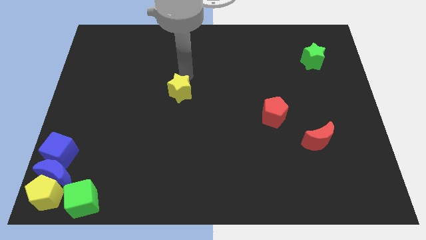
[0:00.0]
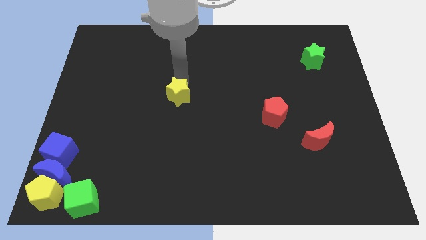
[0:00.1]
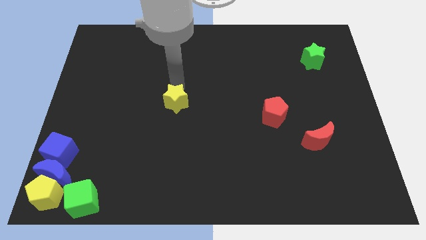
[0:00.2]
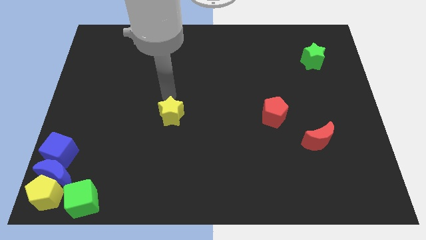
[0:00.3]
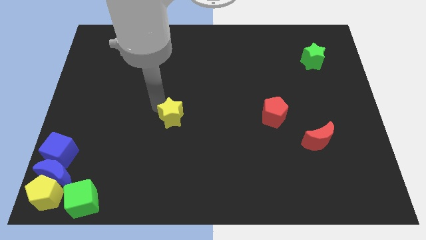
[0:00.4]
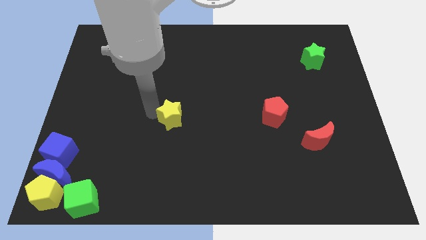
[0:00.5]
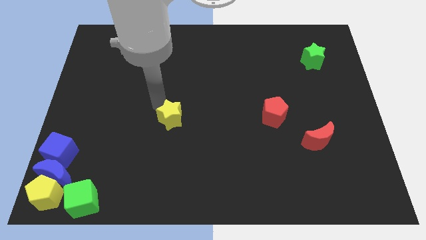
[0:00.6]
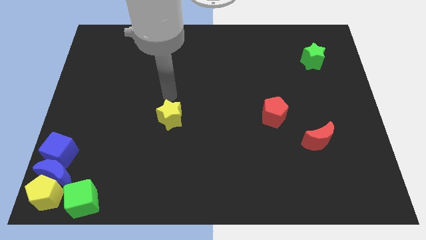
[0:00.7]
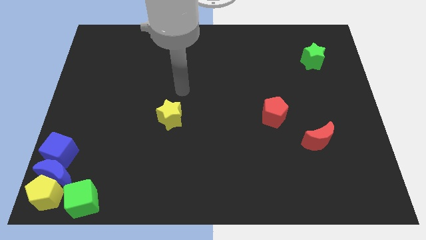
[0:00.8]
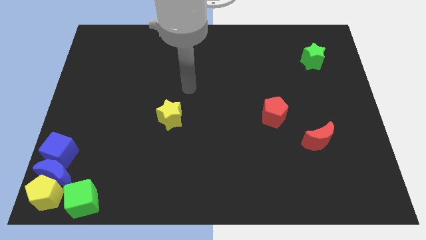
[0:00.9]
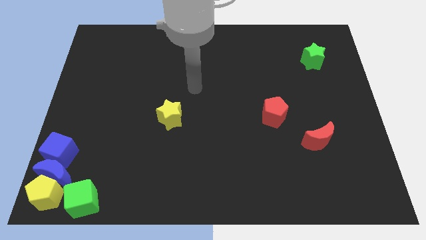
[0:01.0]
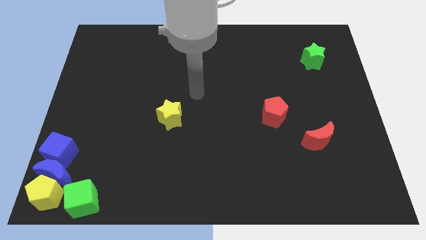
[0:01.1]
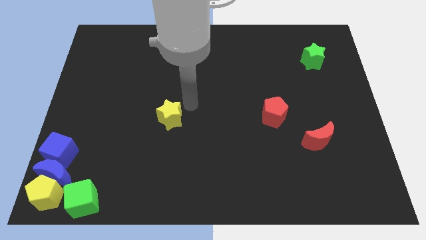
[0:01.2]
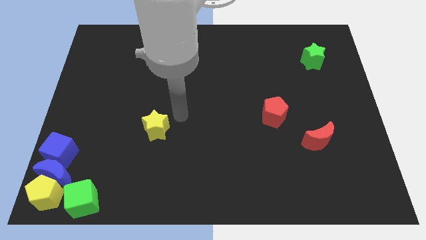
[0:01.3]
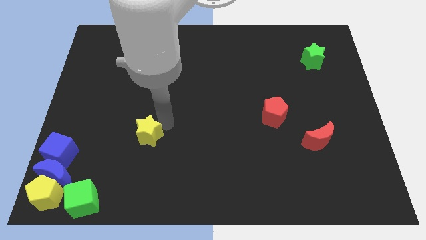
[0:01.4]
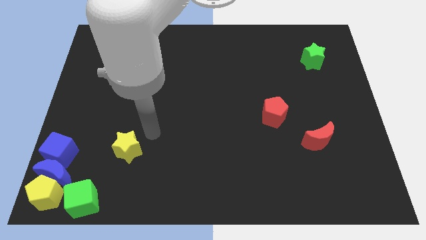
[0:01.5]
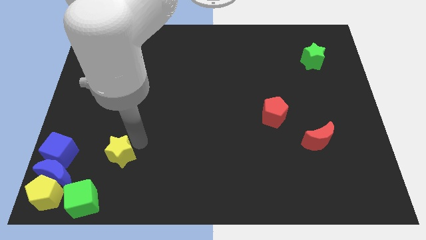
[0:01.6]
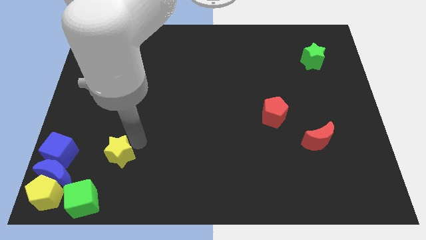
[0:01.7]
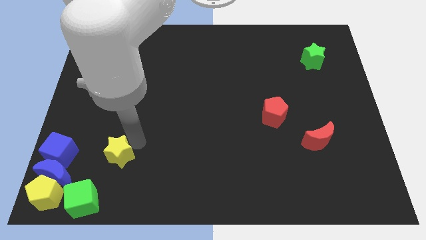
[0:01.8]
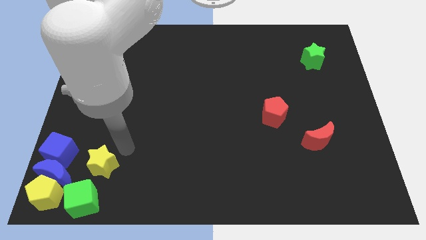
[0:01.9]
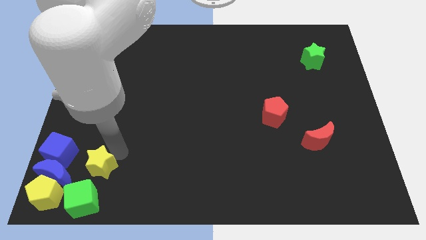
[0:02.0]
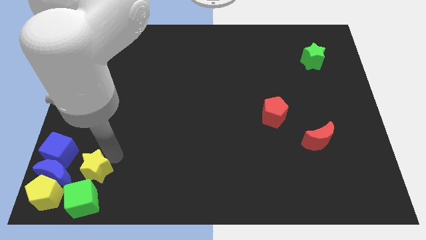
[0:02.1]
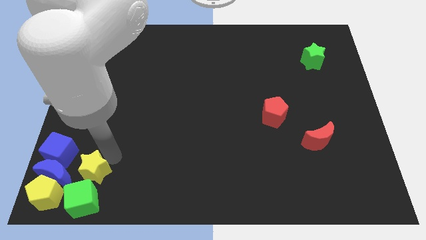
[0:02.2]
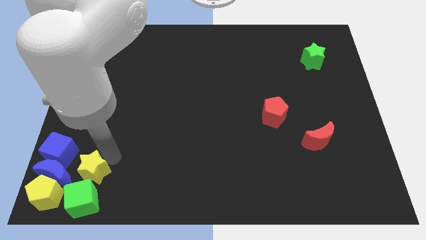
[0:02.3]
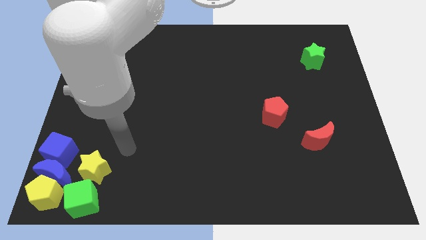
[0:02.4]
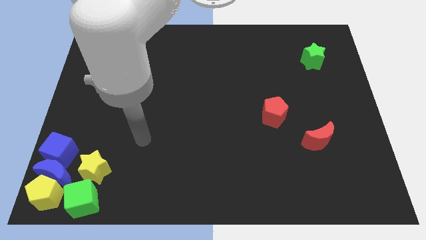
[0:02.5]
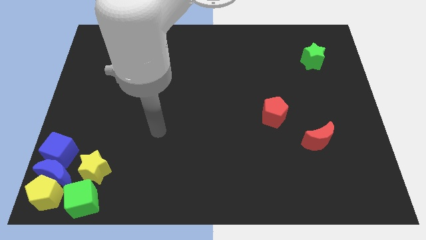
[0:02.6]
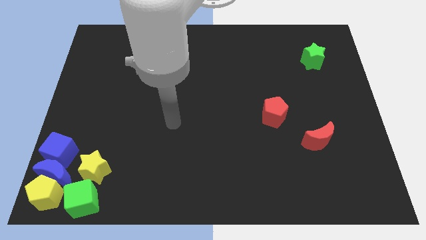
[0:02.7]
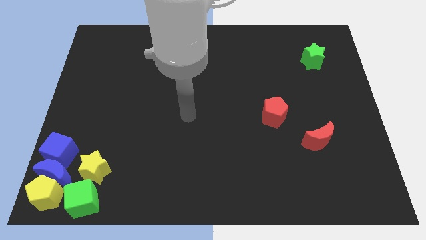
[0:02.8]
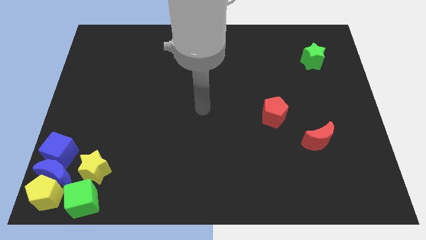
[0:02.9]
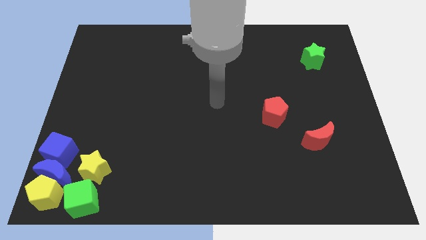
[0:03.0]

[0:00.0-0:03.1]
place yellow star on top of green cube

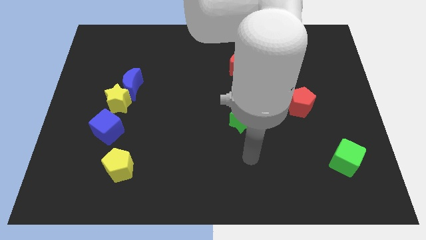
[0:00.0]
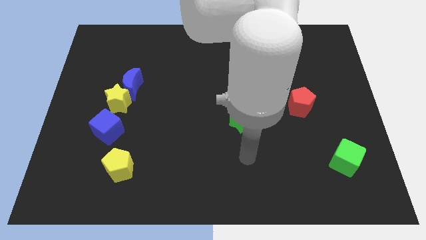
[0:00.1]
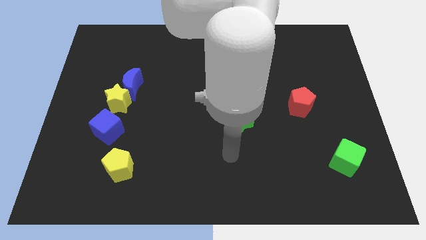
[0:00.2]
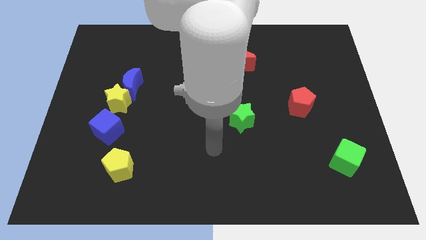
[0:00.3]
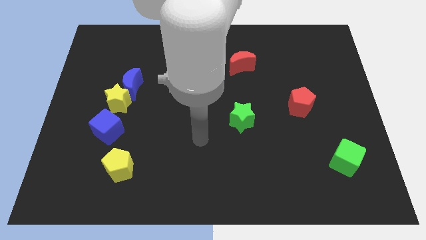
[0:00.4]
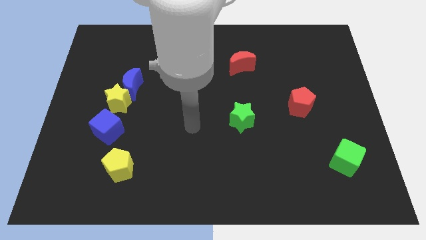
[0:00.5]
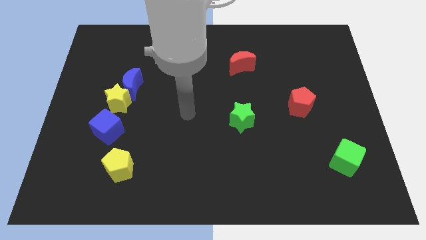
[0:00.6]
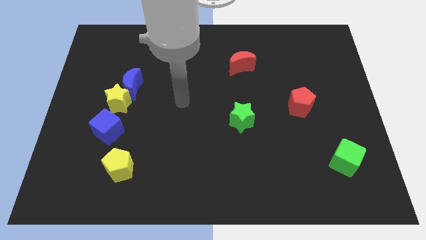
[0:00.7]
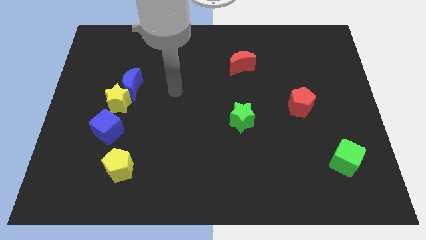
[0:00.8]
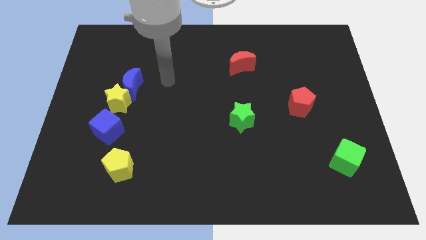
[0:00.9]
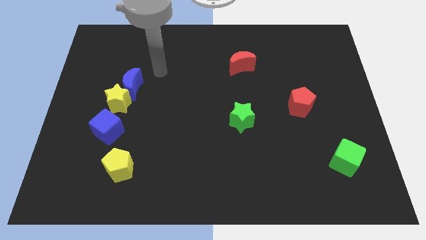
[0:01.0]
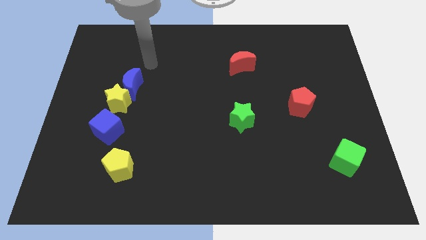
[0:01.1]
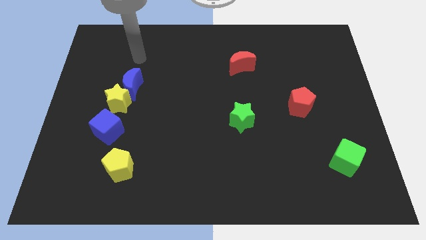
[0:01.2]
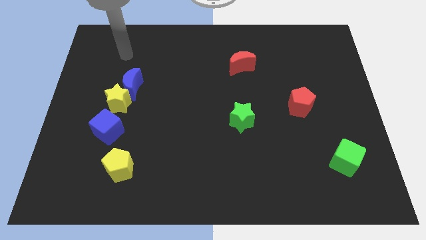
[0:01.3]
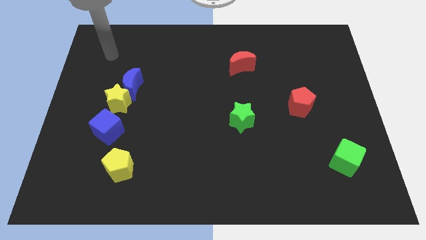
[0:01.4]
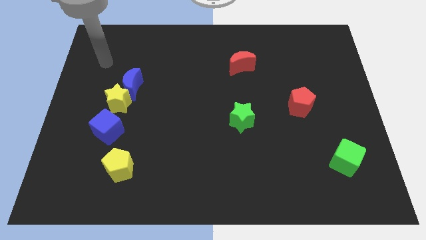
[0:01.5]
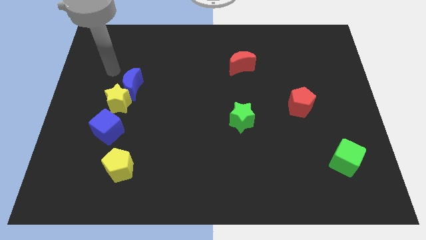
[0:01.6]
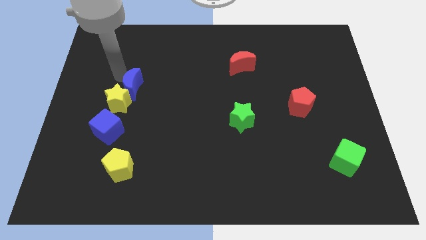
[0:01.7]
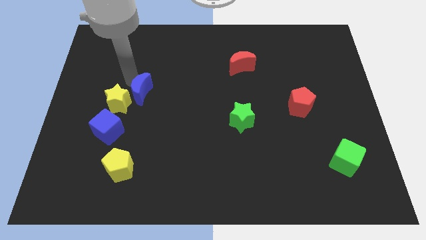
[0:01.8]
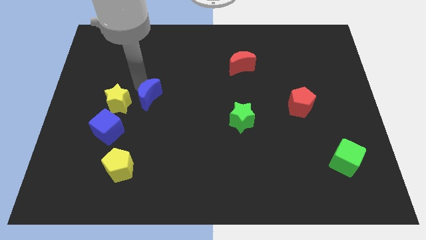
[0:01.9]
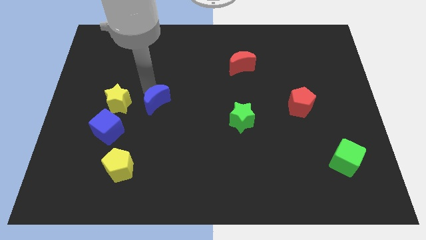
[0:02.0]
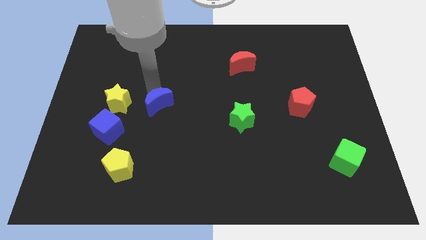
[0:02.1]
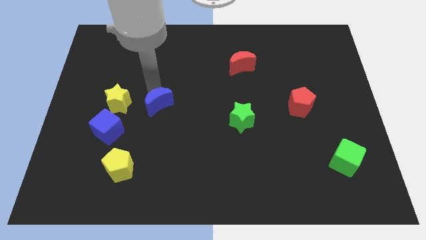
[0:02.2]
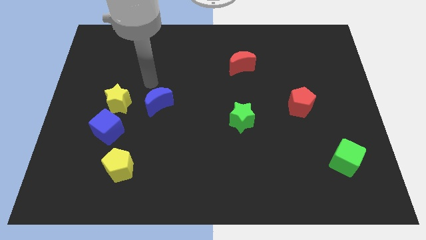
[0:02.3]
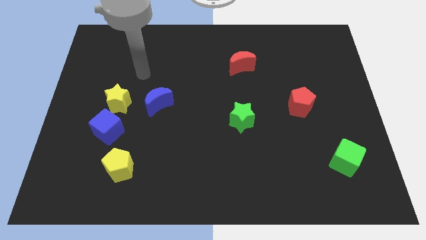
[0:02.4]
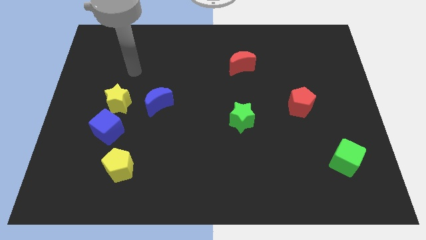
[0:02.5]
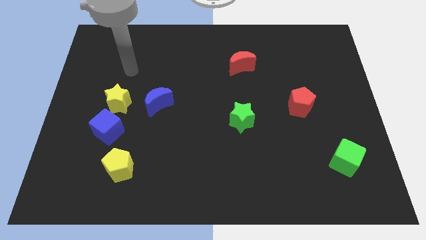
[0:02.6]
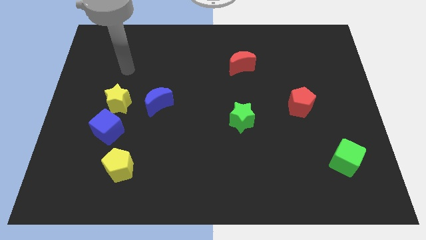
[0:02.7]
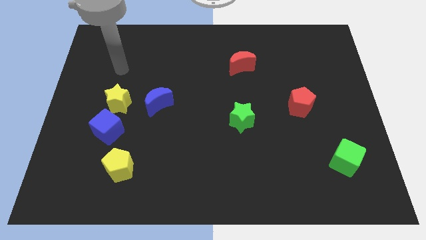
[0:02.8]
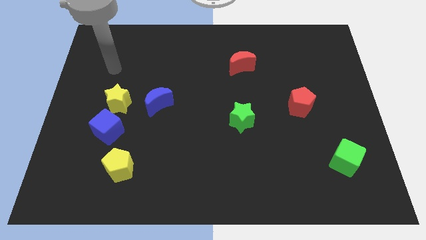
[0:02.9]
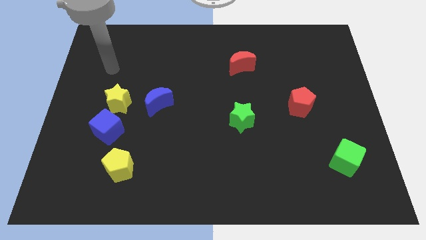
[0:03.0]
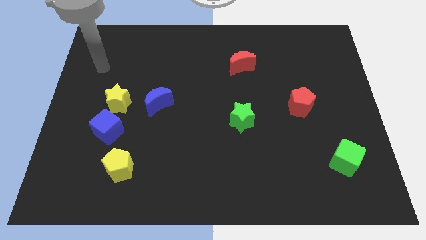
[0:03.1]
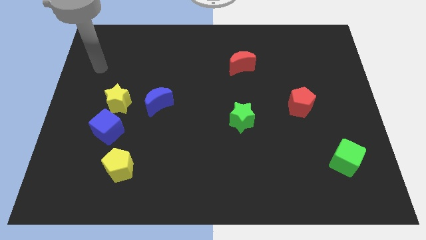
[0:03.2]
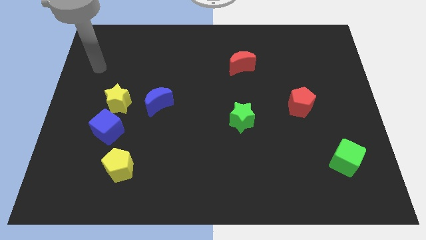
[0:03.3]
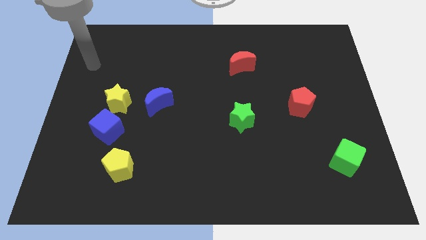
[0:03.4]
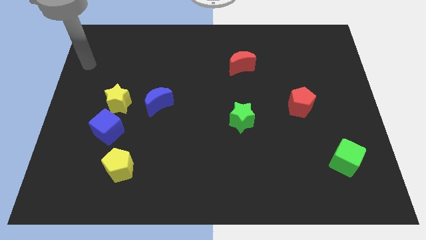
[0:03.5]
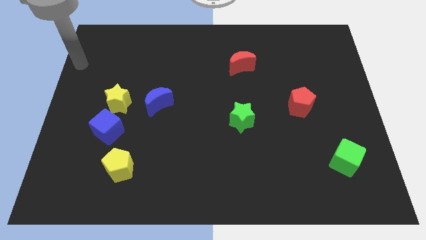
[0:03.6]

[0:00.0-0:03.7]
move blue moon away from the yellow star

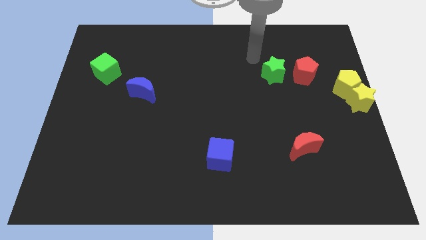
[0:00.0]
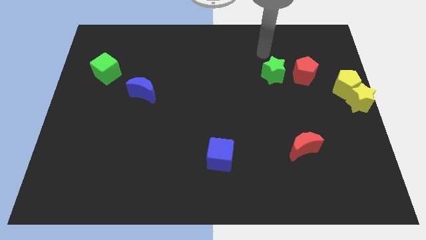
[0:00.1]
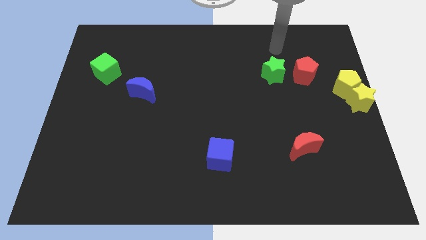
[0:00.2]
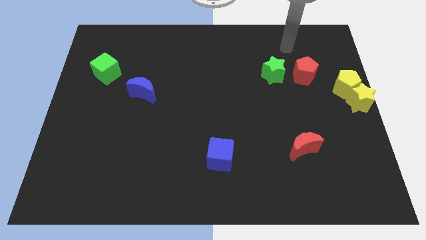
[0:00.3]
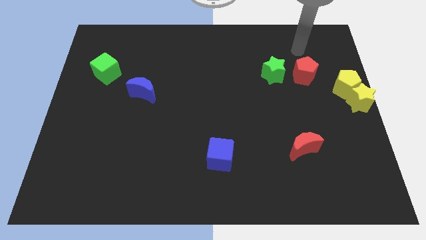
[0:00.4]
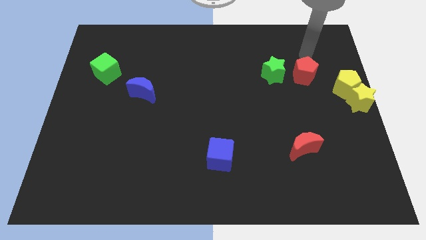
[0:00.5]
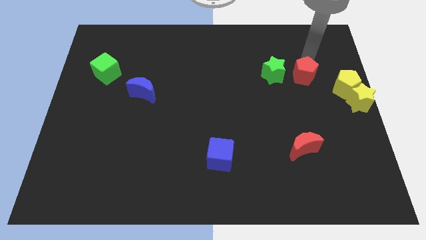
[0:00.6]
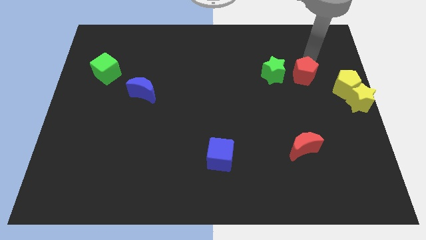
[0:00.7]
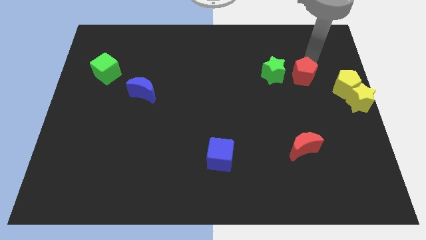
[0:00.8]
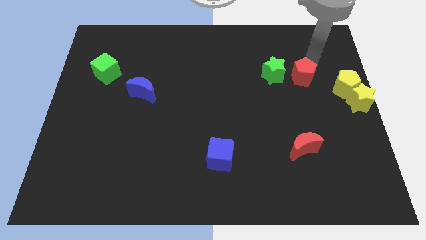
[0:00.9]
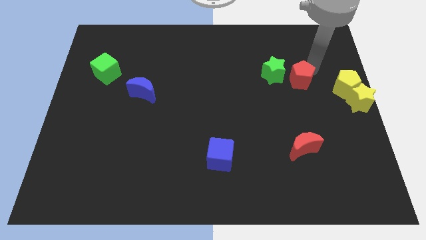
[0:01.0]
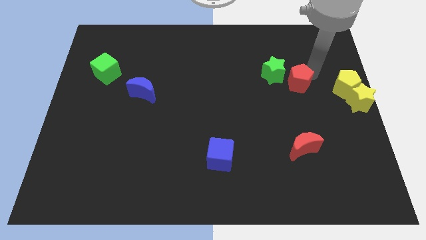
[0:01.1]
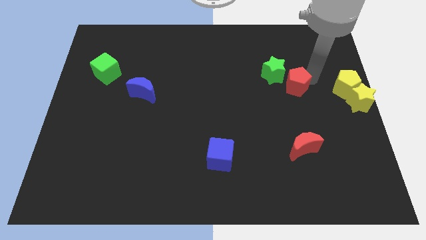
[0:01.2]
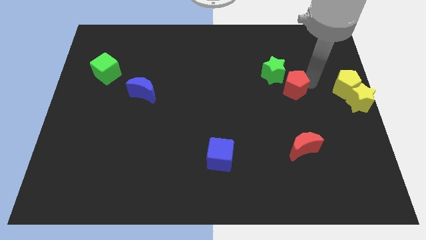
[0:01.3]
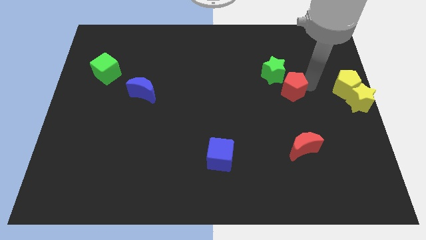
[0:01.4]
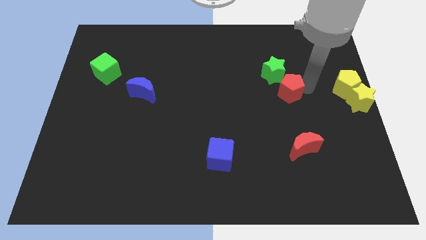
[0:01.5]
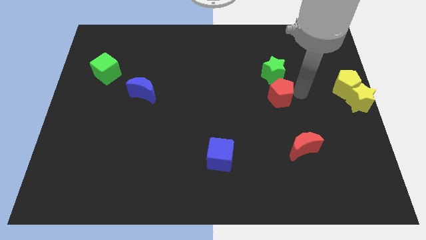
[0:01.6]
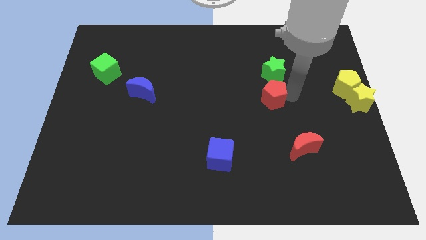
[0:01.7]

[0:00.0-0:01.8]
place red pentagon to the bottom of green star

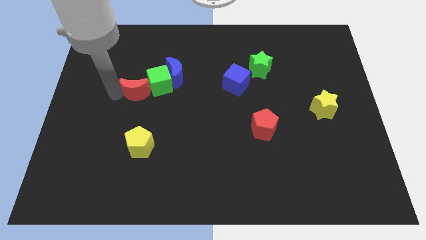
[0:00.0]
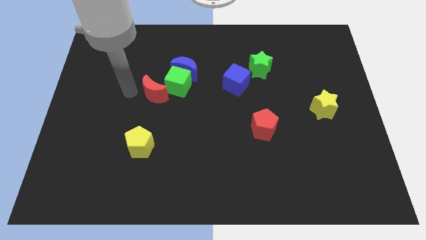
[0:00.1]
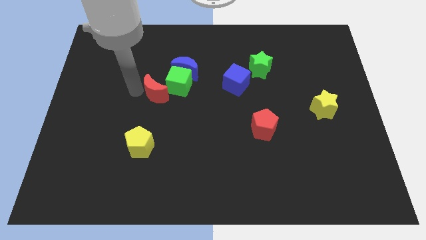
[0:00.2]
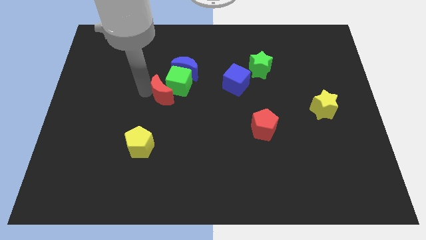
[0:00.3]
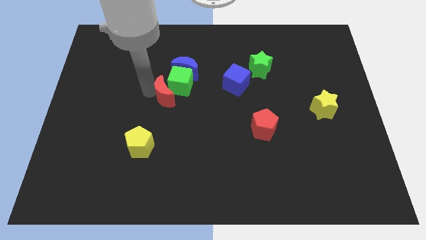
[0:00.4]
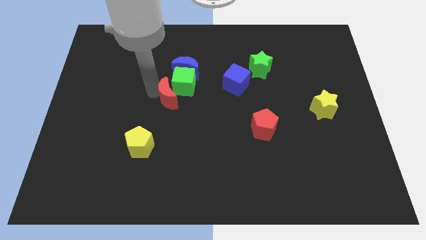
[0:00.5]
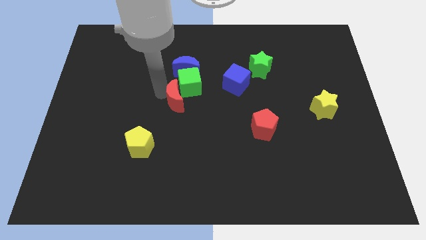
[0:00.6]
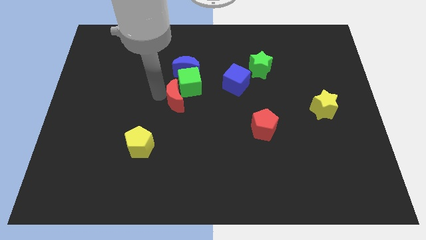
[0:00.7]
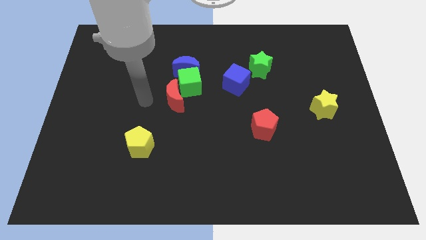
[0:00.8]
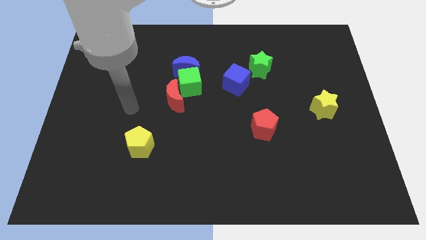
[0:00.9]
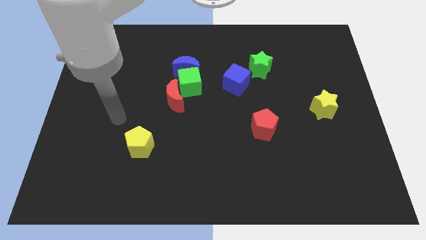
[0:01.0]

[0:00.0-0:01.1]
push the red crescent into the green cube
